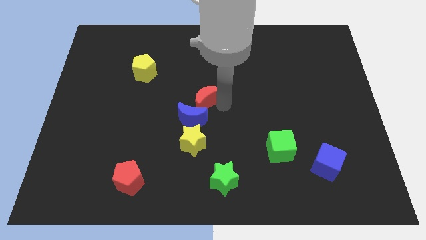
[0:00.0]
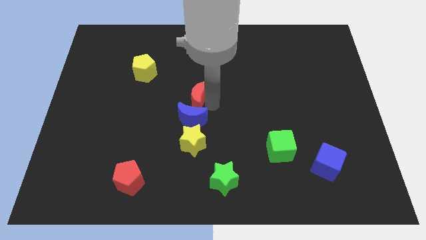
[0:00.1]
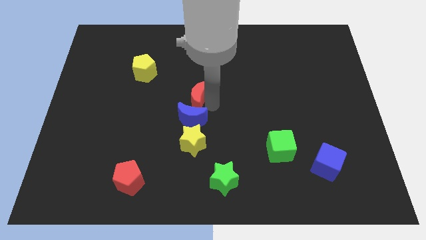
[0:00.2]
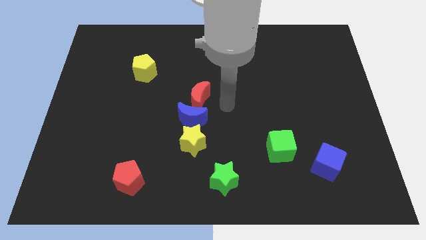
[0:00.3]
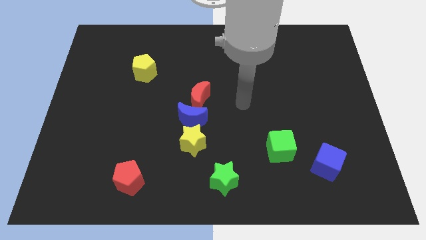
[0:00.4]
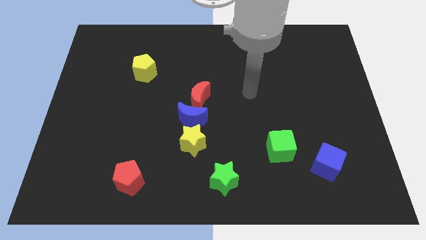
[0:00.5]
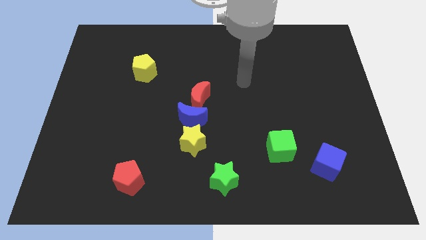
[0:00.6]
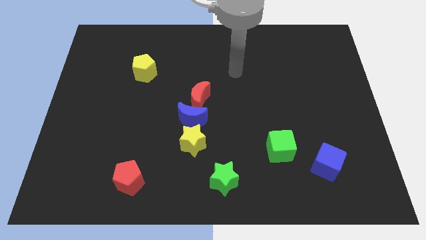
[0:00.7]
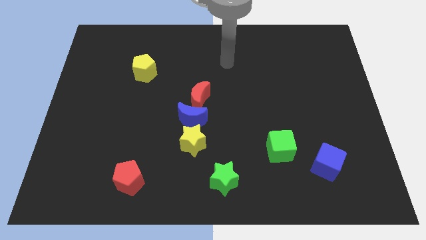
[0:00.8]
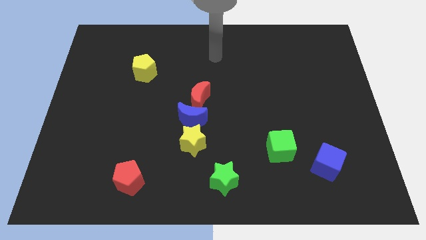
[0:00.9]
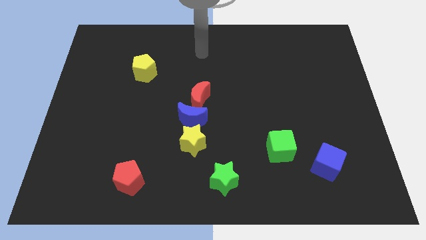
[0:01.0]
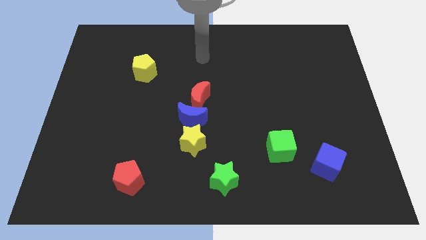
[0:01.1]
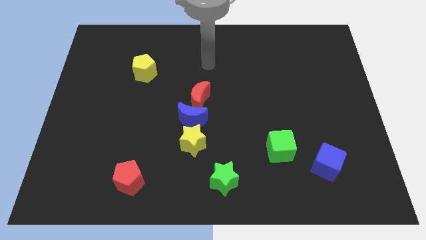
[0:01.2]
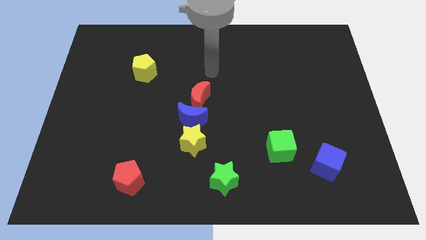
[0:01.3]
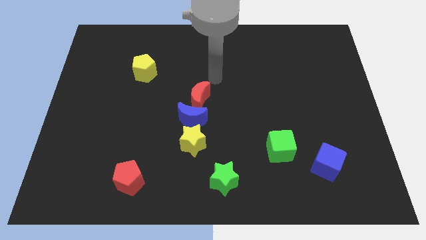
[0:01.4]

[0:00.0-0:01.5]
place your arm to the top side of the red moon

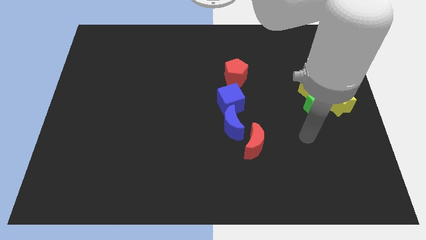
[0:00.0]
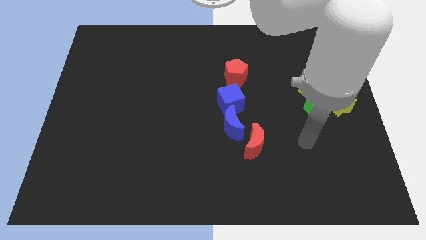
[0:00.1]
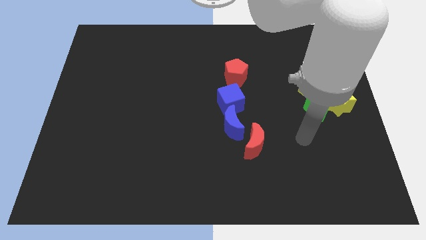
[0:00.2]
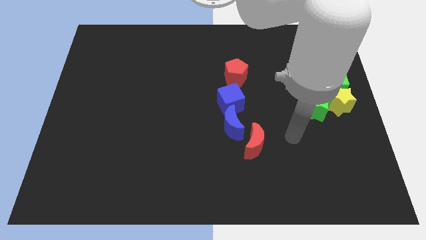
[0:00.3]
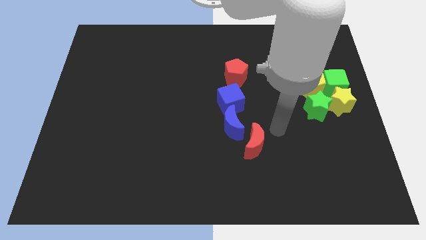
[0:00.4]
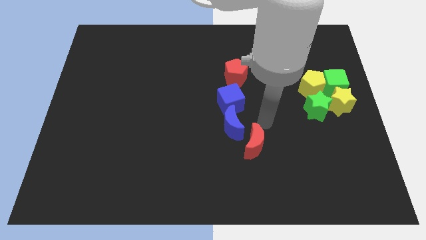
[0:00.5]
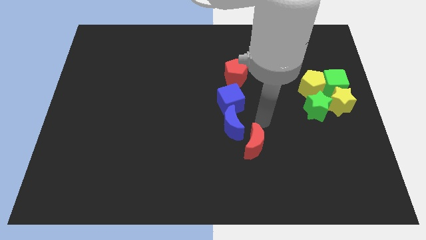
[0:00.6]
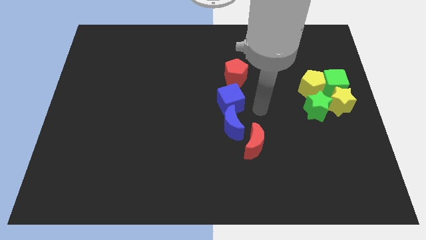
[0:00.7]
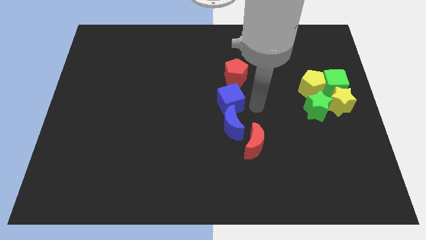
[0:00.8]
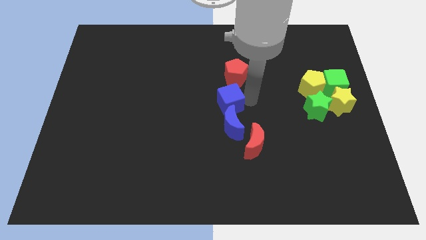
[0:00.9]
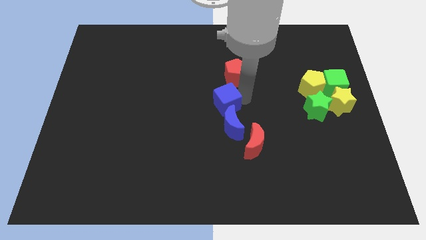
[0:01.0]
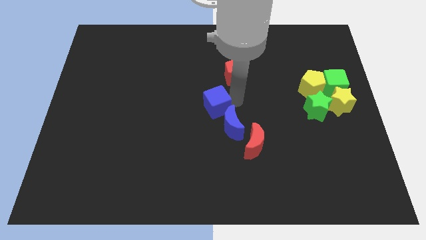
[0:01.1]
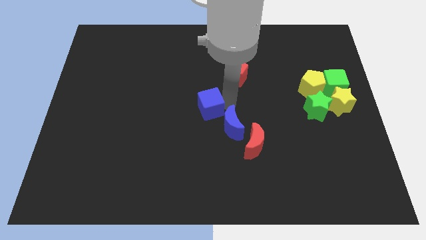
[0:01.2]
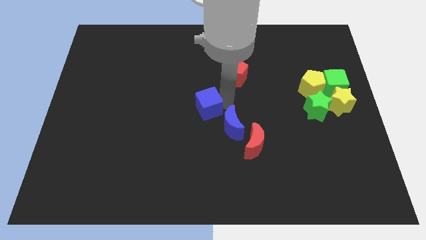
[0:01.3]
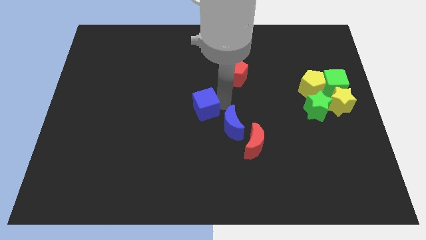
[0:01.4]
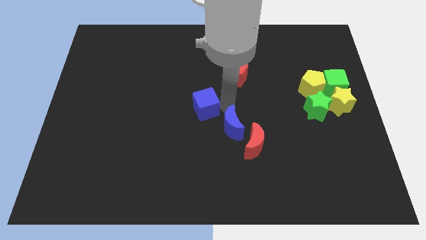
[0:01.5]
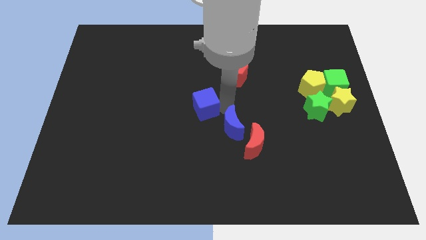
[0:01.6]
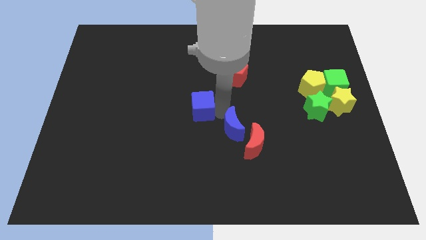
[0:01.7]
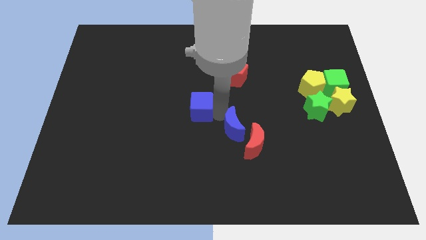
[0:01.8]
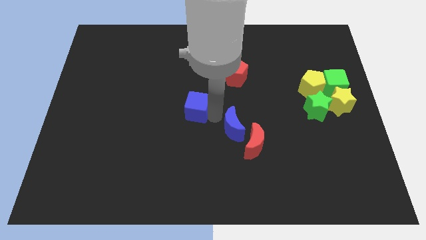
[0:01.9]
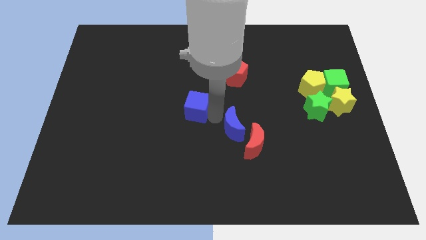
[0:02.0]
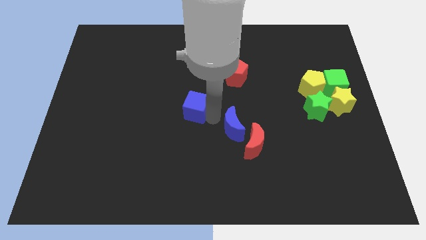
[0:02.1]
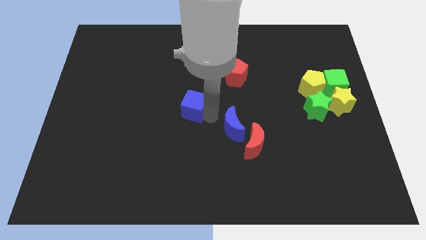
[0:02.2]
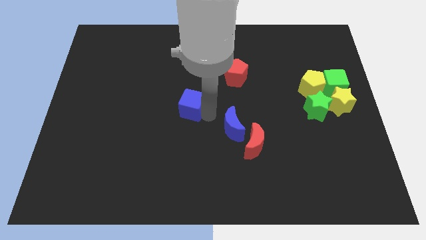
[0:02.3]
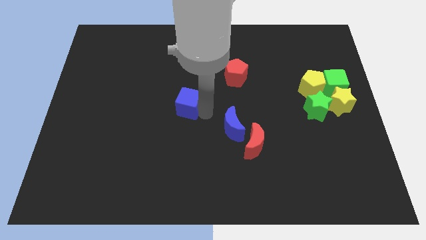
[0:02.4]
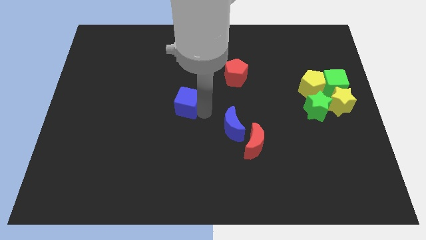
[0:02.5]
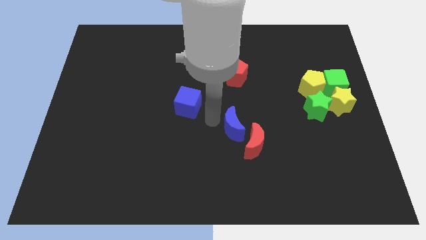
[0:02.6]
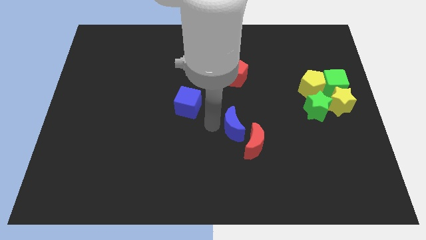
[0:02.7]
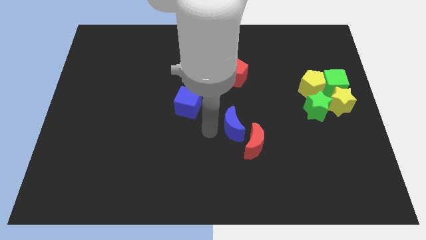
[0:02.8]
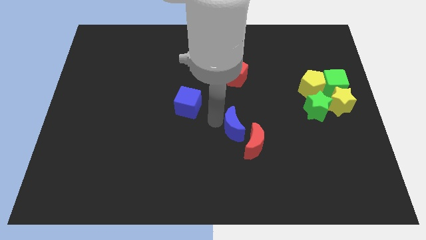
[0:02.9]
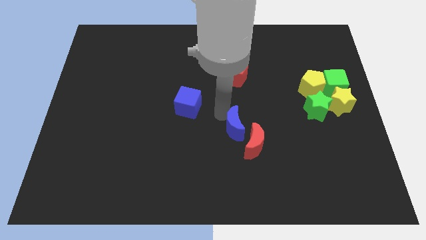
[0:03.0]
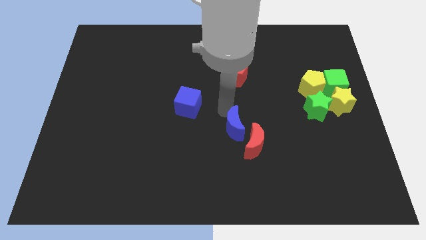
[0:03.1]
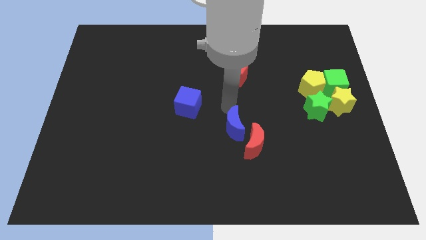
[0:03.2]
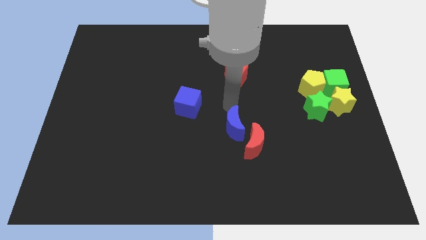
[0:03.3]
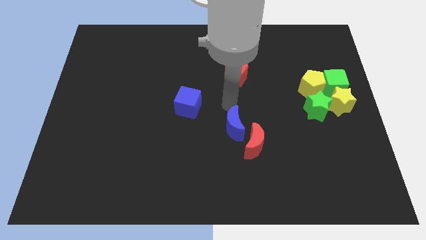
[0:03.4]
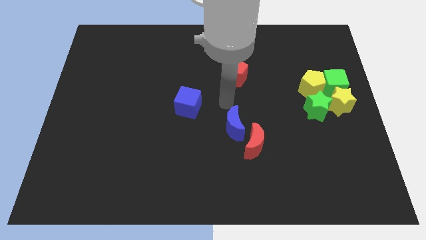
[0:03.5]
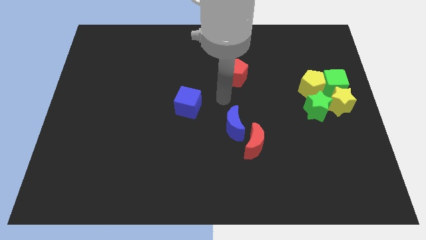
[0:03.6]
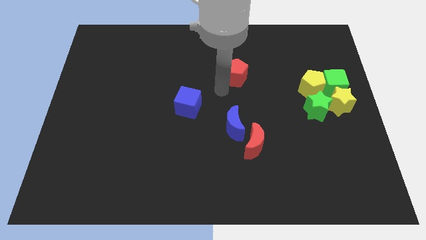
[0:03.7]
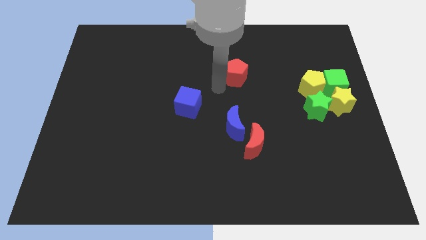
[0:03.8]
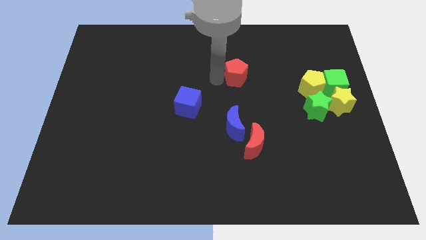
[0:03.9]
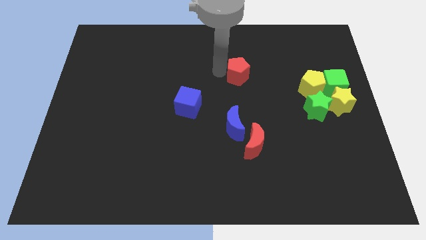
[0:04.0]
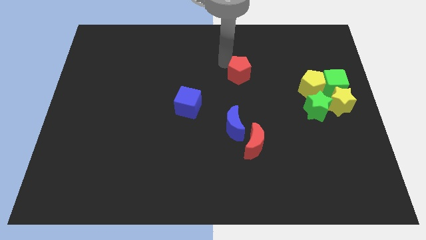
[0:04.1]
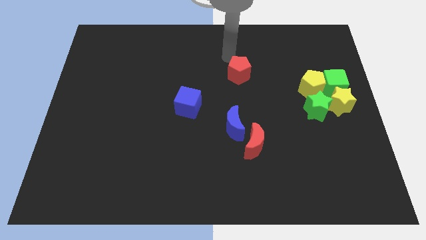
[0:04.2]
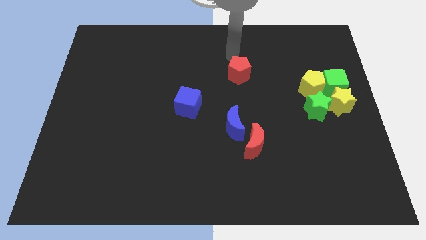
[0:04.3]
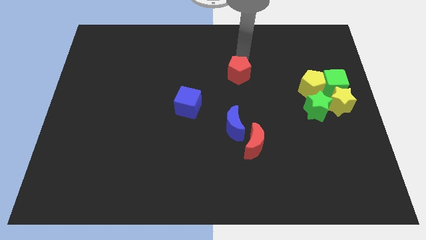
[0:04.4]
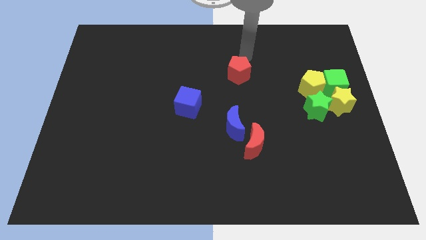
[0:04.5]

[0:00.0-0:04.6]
separate the blue cube from the group of blocks

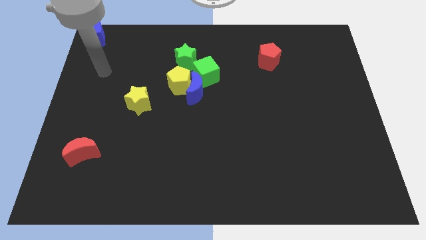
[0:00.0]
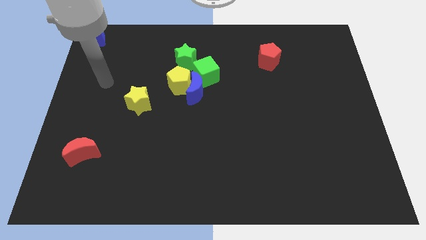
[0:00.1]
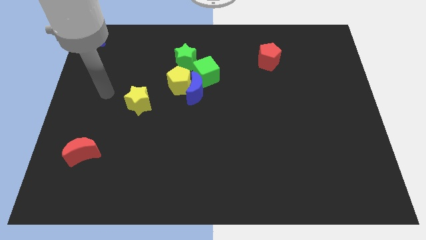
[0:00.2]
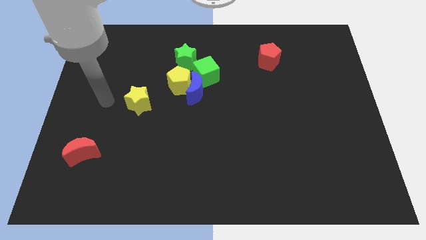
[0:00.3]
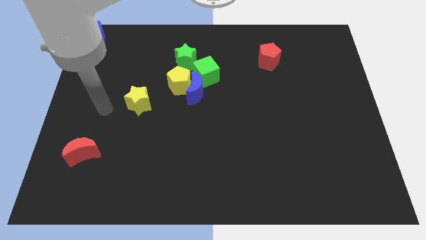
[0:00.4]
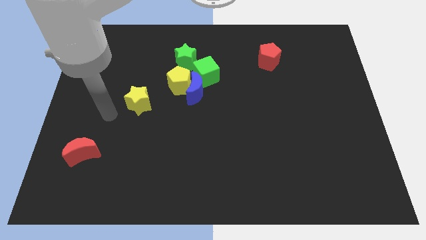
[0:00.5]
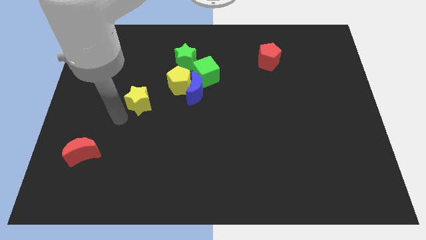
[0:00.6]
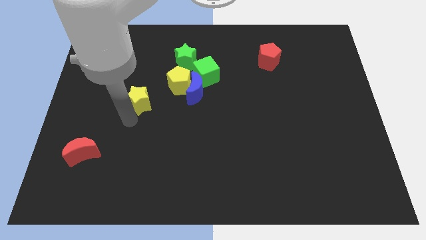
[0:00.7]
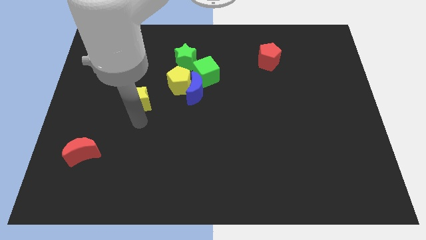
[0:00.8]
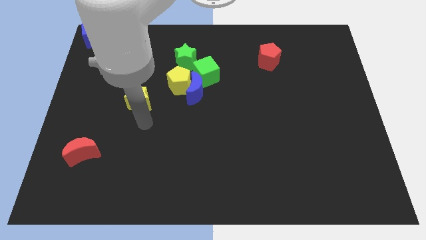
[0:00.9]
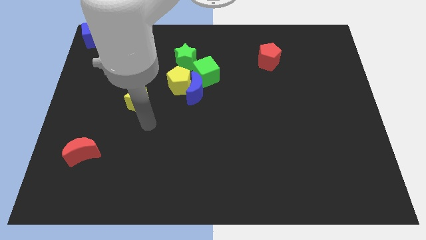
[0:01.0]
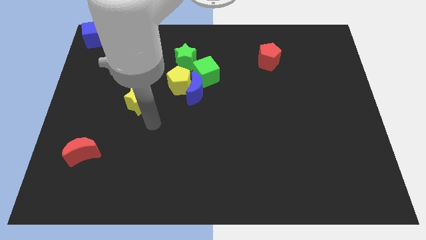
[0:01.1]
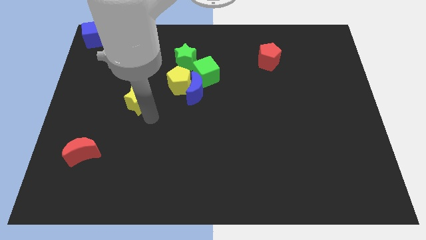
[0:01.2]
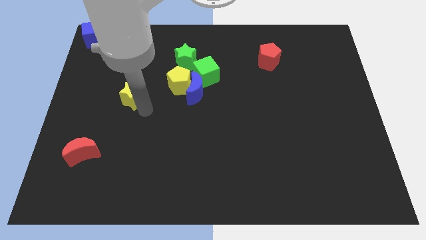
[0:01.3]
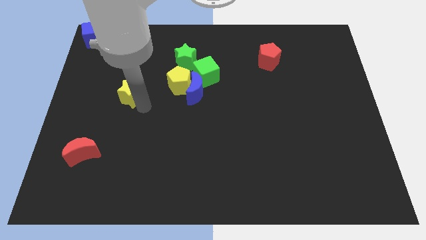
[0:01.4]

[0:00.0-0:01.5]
touch the right side of the yellow star

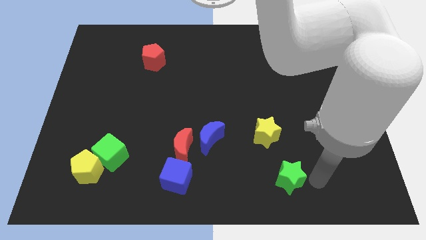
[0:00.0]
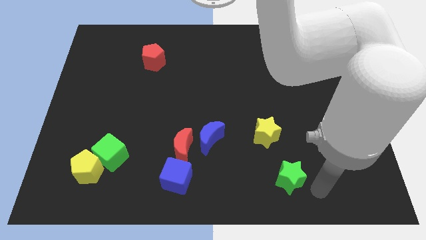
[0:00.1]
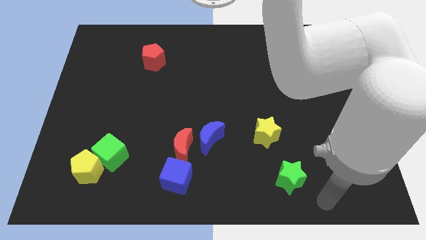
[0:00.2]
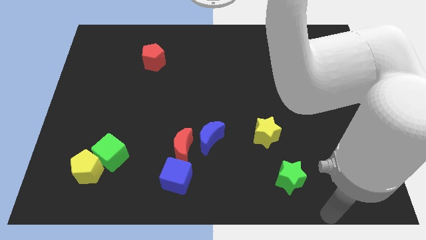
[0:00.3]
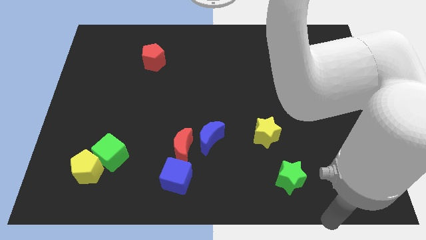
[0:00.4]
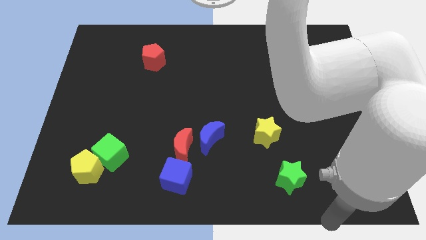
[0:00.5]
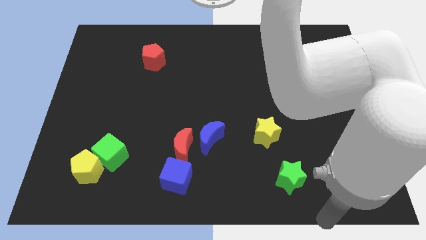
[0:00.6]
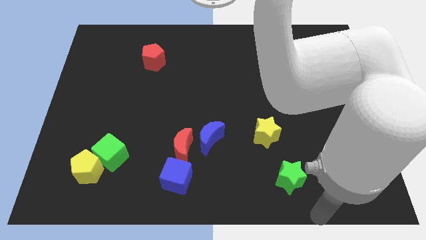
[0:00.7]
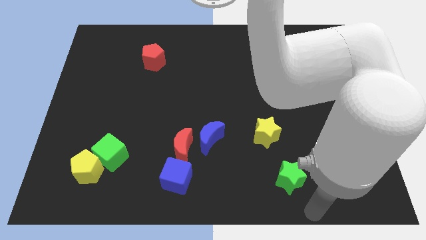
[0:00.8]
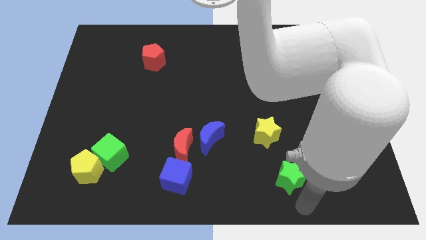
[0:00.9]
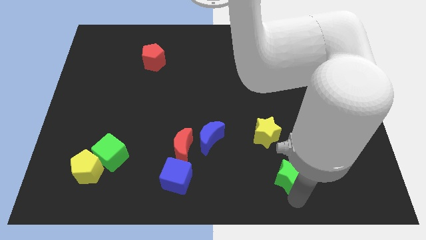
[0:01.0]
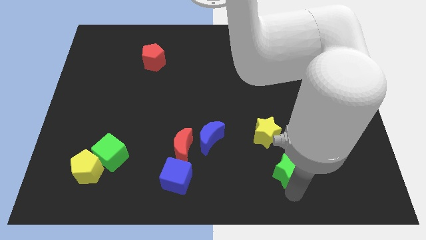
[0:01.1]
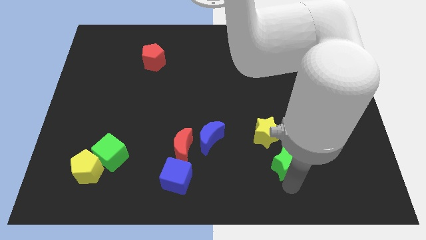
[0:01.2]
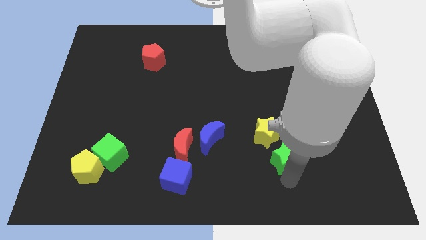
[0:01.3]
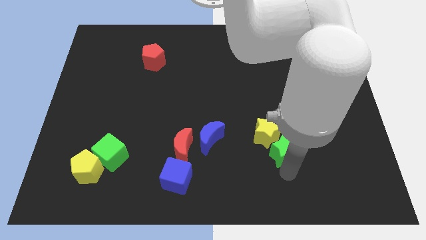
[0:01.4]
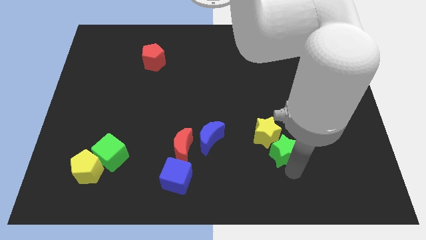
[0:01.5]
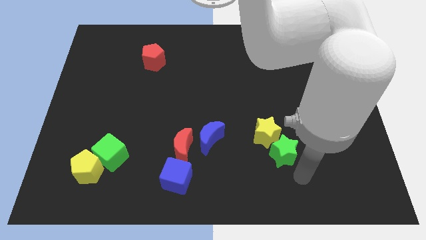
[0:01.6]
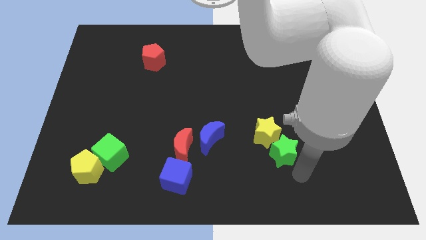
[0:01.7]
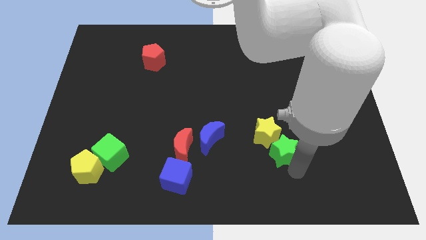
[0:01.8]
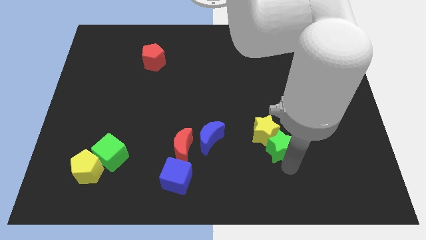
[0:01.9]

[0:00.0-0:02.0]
push the green star into the yellow star
